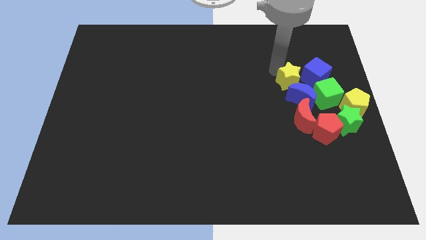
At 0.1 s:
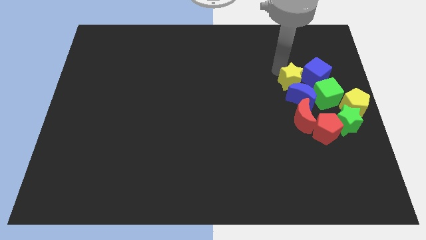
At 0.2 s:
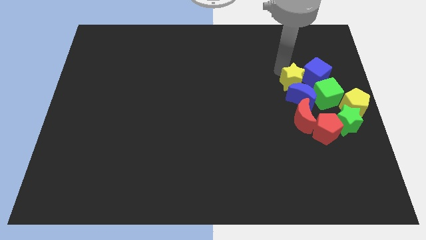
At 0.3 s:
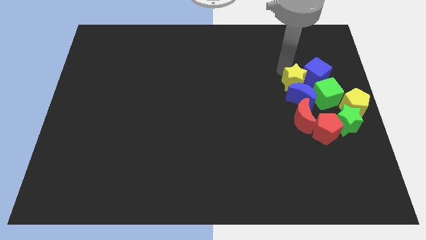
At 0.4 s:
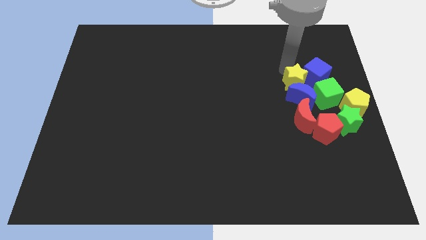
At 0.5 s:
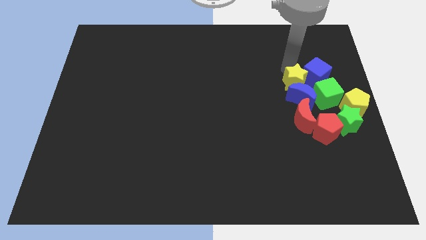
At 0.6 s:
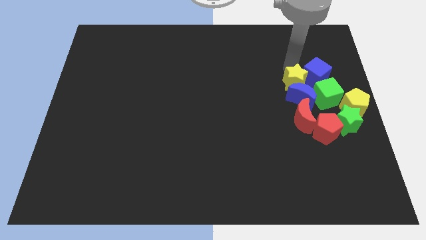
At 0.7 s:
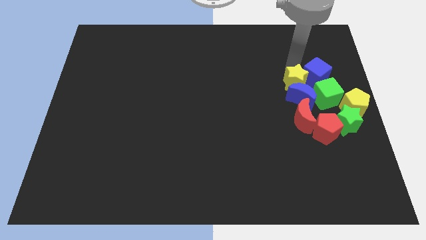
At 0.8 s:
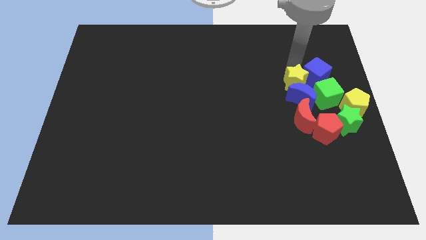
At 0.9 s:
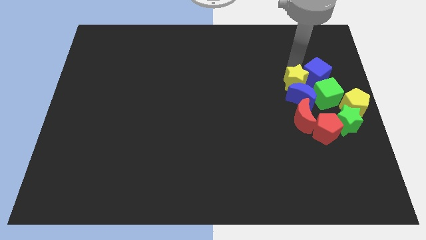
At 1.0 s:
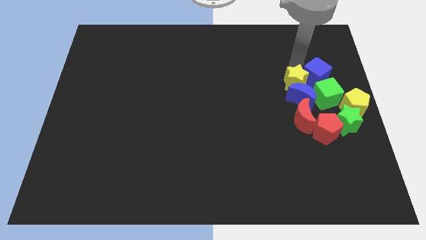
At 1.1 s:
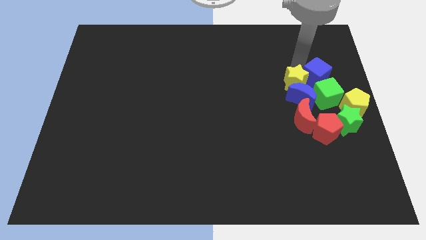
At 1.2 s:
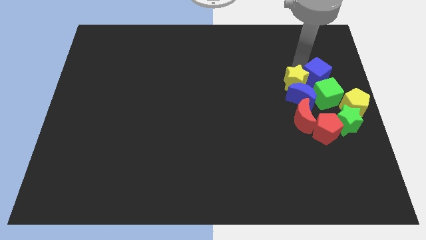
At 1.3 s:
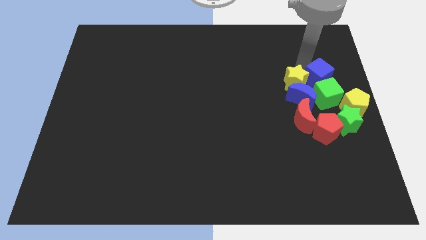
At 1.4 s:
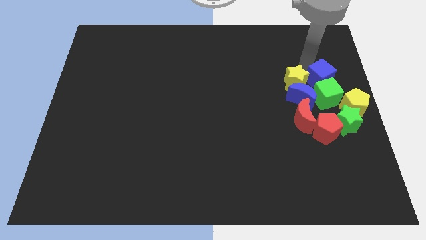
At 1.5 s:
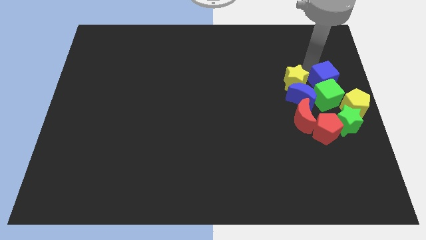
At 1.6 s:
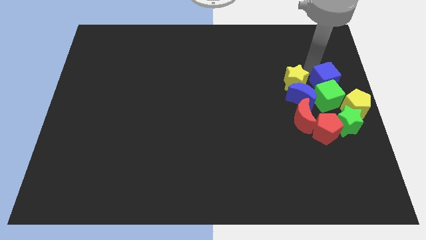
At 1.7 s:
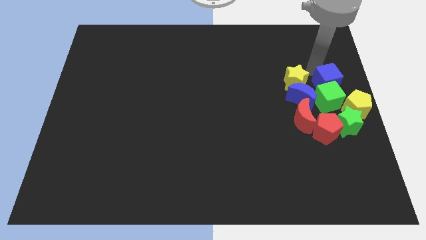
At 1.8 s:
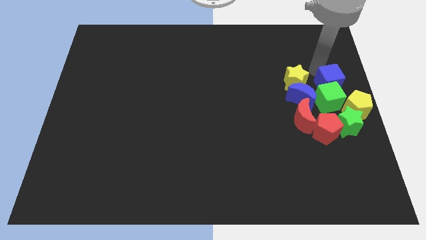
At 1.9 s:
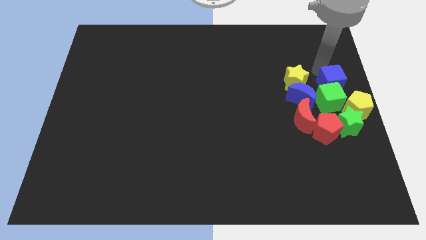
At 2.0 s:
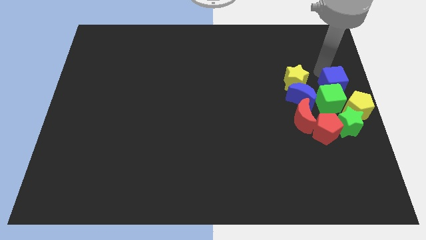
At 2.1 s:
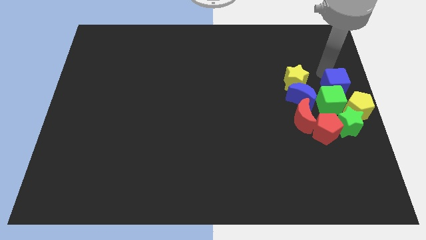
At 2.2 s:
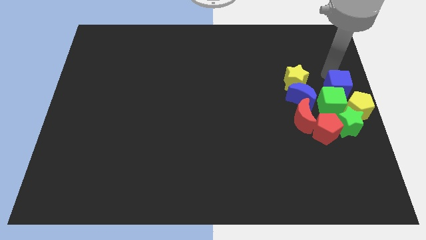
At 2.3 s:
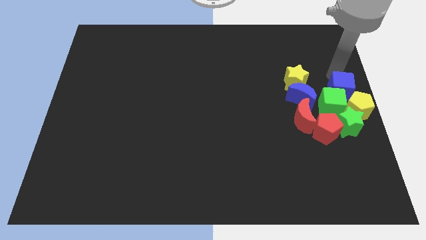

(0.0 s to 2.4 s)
push the blue cube into the green cube

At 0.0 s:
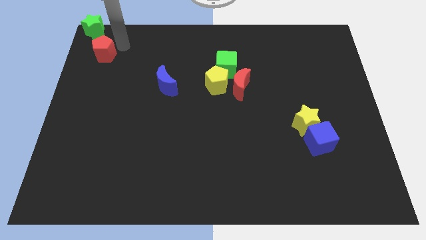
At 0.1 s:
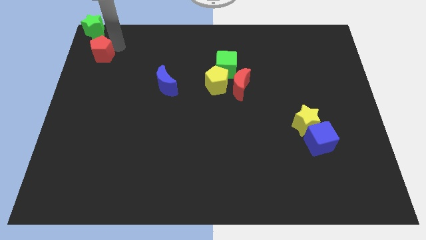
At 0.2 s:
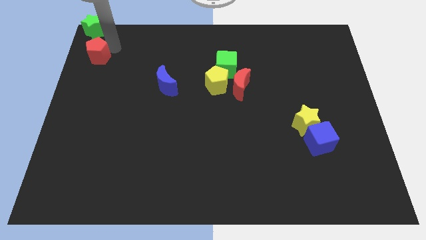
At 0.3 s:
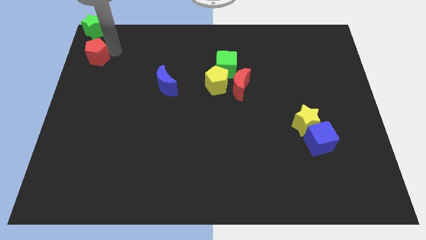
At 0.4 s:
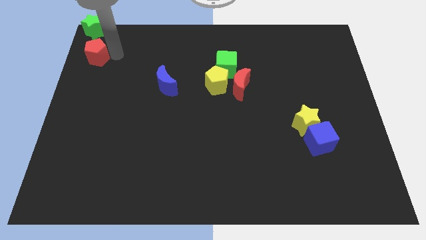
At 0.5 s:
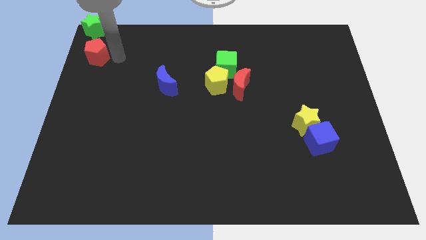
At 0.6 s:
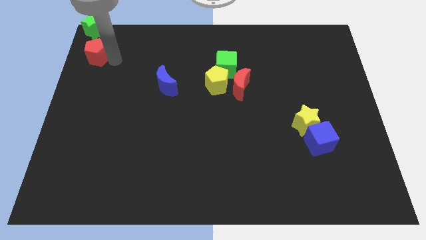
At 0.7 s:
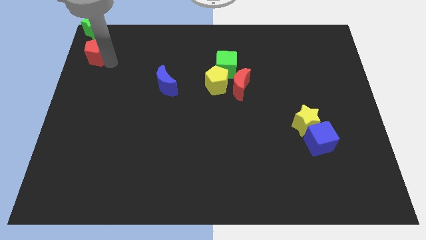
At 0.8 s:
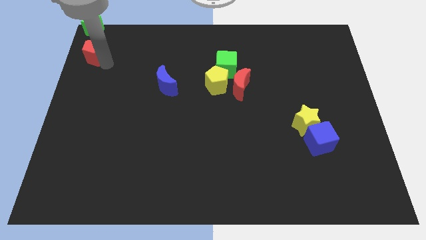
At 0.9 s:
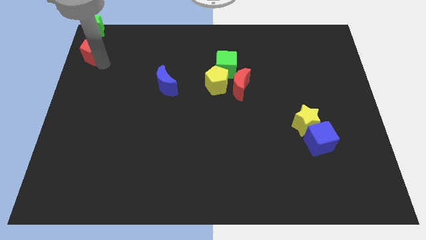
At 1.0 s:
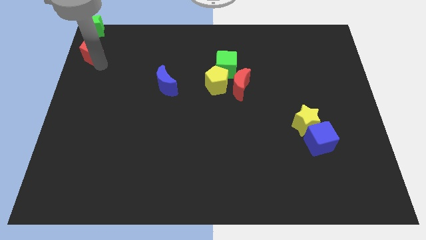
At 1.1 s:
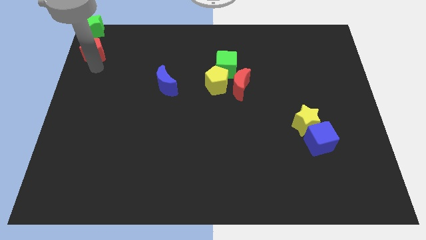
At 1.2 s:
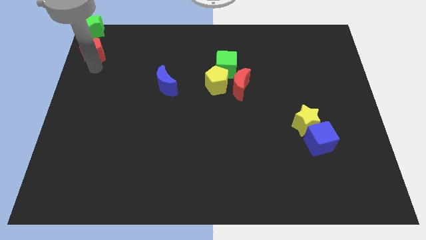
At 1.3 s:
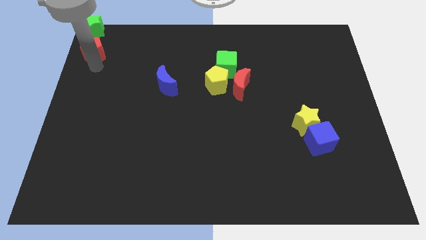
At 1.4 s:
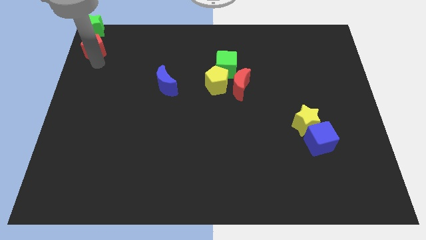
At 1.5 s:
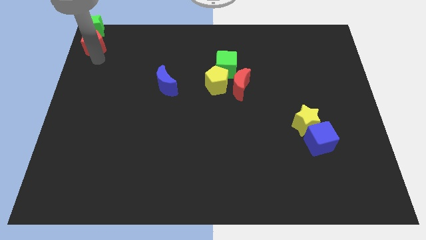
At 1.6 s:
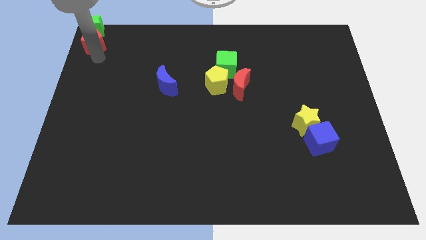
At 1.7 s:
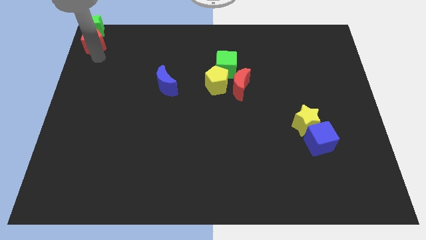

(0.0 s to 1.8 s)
place the red pentagon below the green star

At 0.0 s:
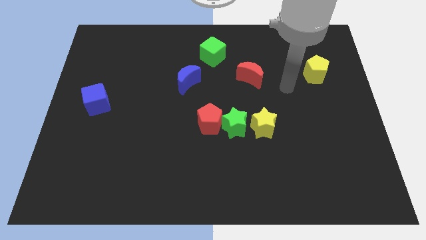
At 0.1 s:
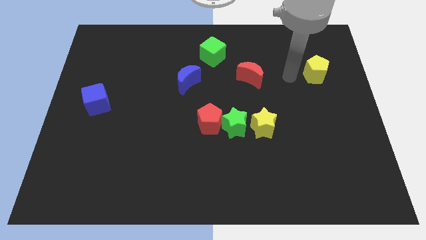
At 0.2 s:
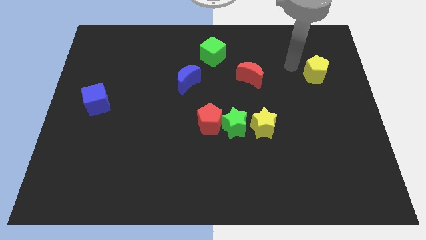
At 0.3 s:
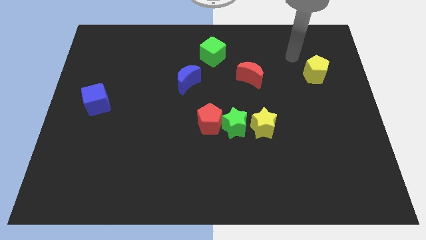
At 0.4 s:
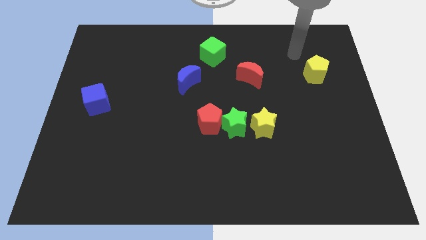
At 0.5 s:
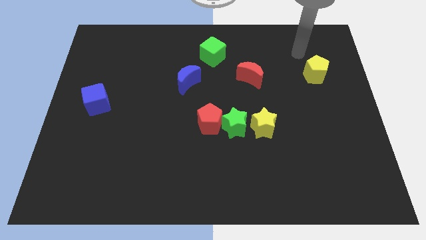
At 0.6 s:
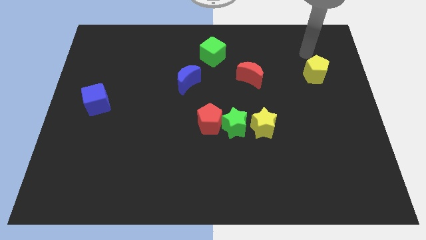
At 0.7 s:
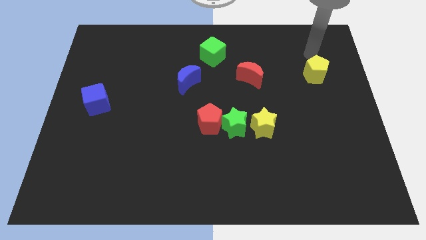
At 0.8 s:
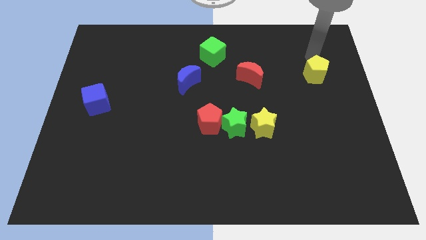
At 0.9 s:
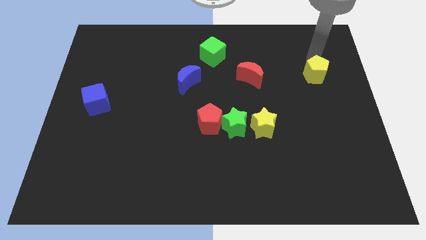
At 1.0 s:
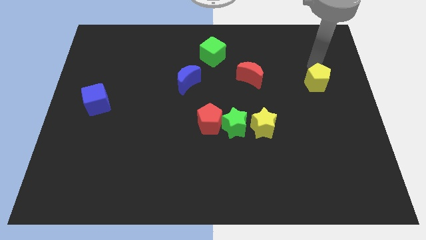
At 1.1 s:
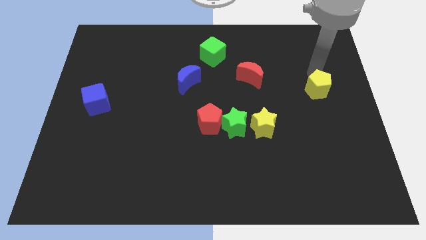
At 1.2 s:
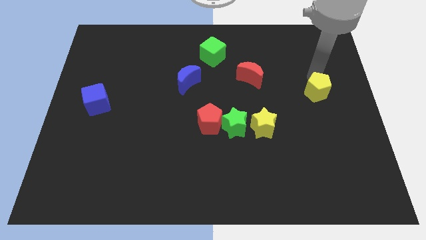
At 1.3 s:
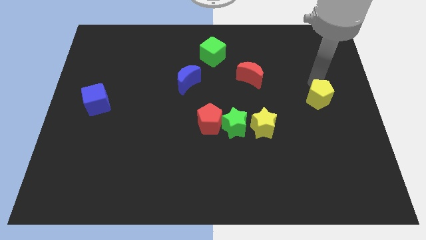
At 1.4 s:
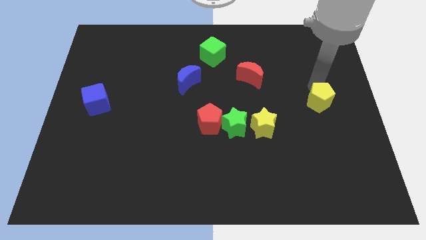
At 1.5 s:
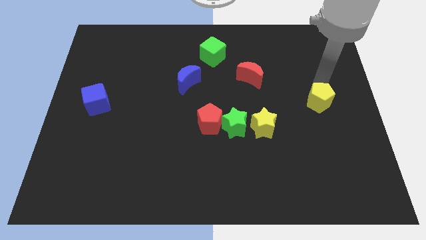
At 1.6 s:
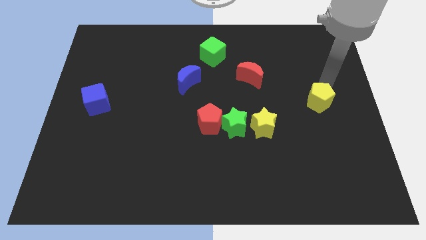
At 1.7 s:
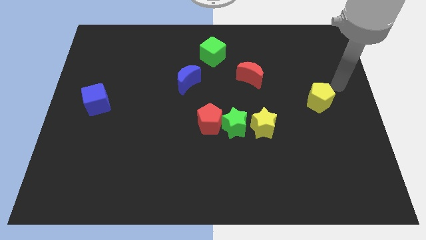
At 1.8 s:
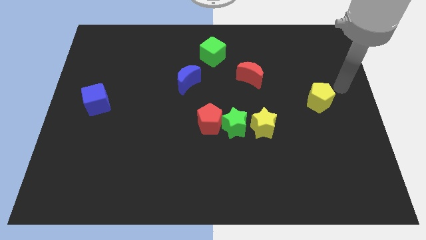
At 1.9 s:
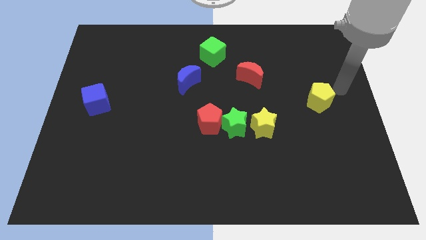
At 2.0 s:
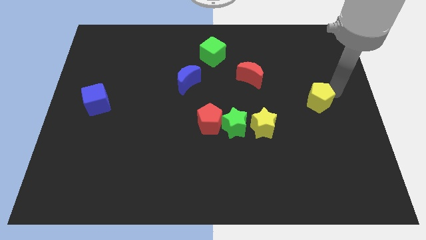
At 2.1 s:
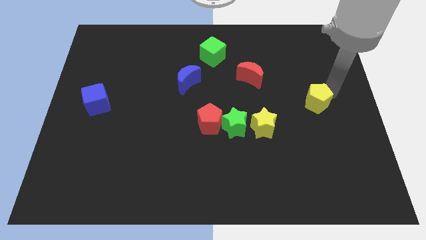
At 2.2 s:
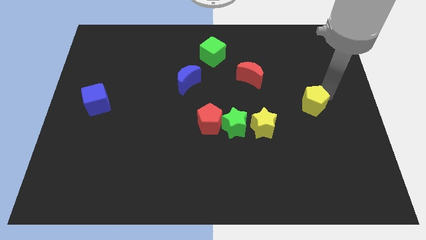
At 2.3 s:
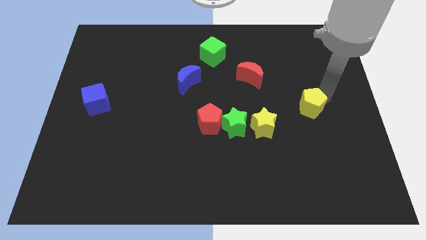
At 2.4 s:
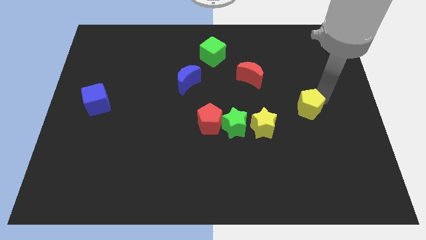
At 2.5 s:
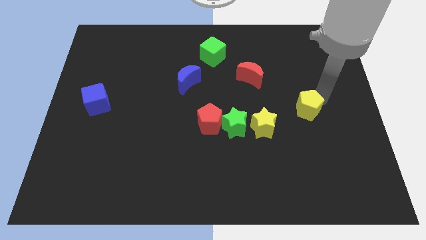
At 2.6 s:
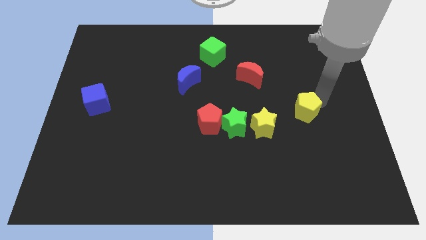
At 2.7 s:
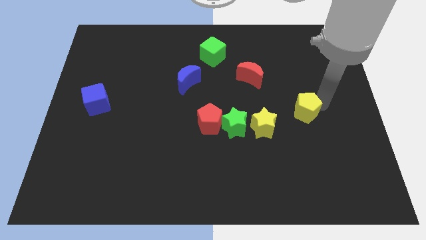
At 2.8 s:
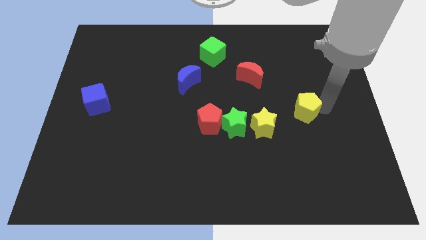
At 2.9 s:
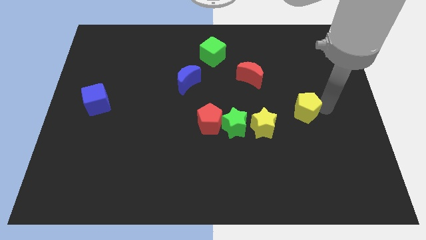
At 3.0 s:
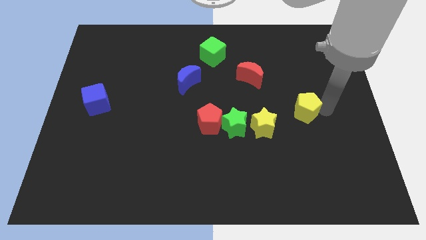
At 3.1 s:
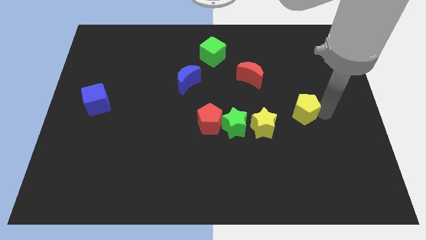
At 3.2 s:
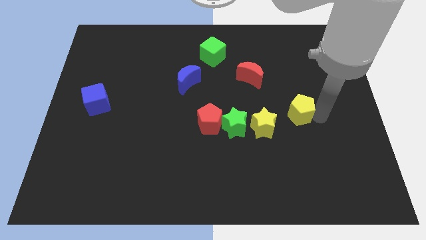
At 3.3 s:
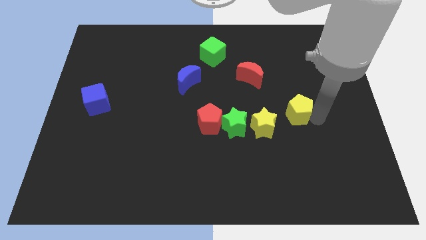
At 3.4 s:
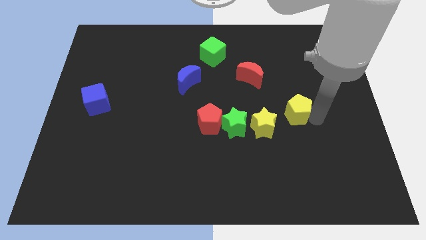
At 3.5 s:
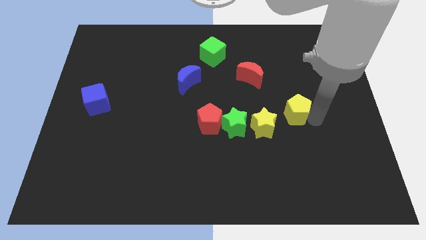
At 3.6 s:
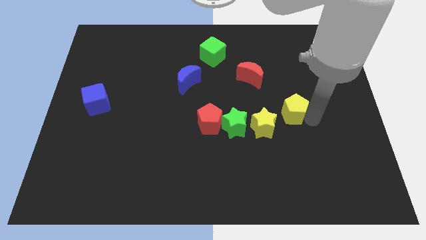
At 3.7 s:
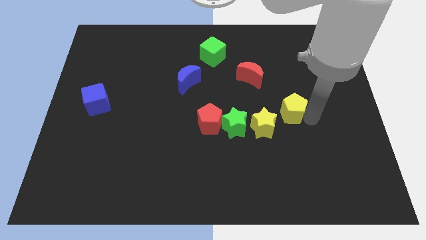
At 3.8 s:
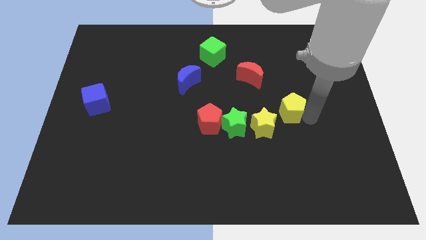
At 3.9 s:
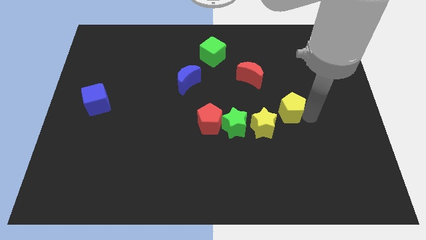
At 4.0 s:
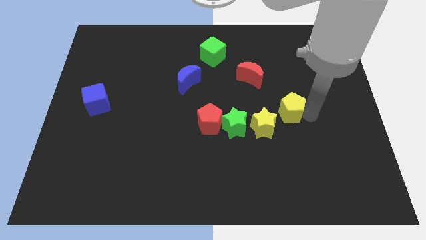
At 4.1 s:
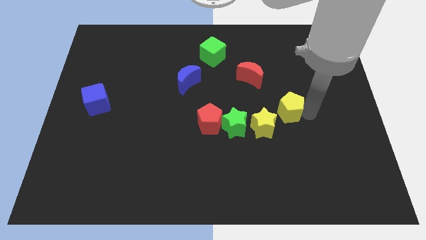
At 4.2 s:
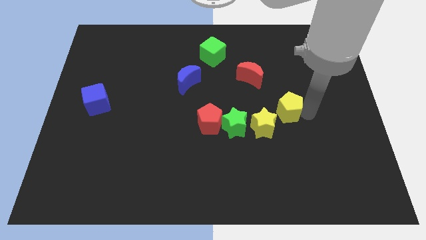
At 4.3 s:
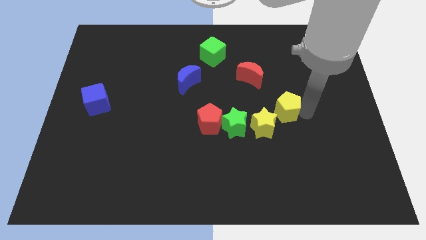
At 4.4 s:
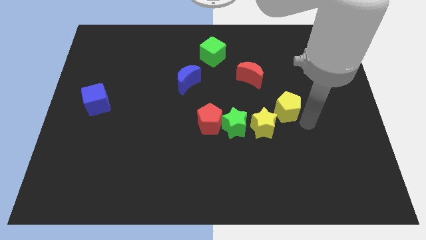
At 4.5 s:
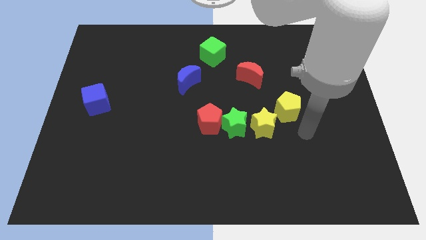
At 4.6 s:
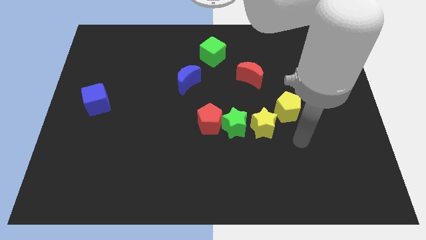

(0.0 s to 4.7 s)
move the yellow pentagon close to the yellow star
